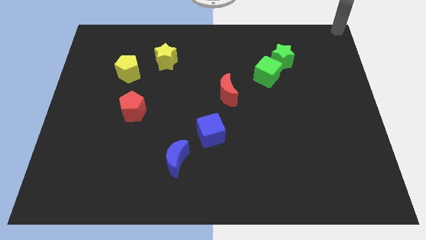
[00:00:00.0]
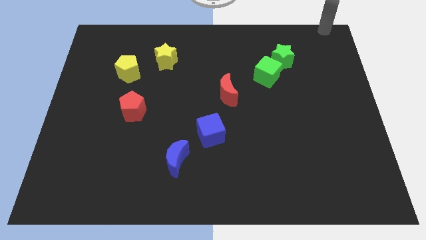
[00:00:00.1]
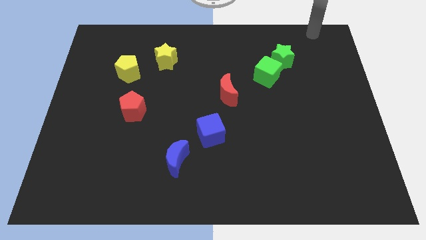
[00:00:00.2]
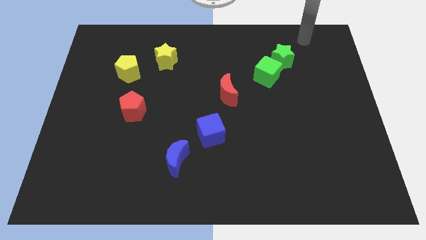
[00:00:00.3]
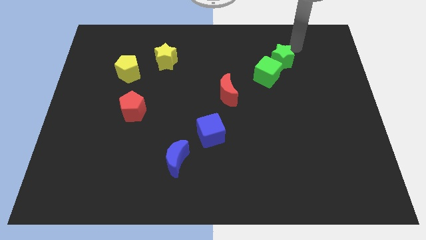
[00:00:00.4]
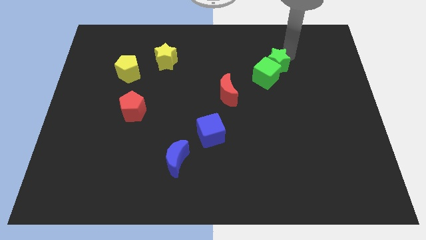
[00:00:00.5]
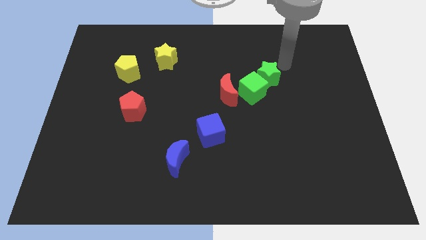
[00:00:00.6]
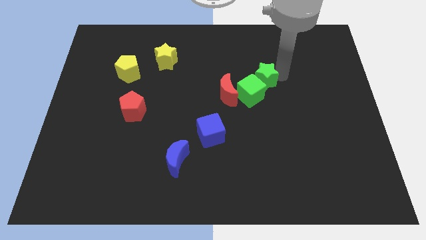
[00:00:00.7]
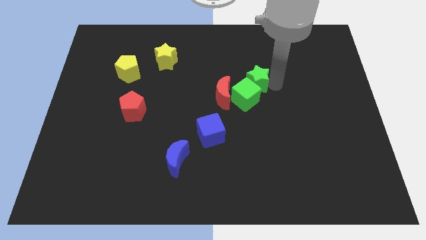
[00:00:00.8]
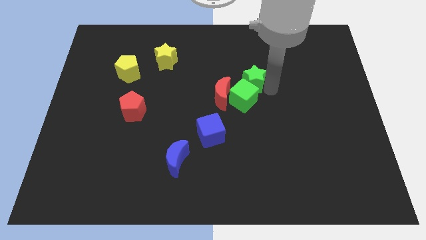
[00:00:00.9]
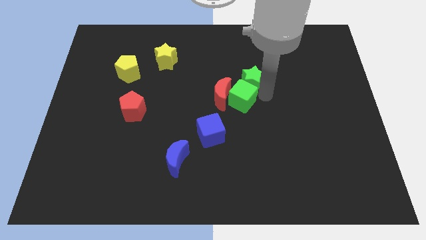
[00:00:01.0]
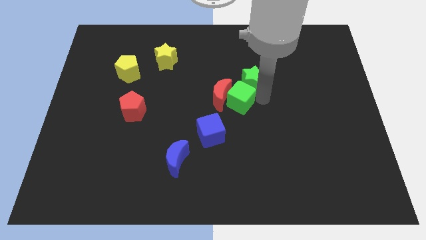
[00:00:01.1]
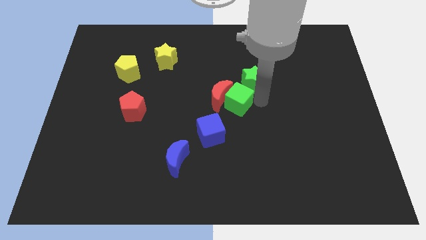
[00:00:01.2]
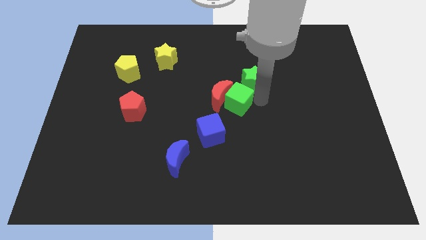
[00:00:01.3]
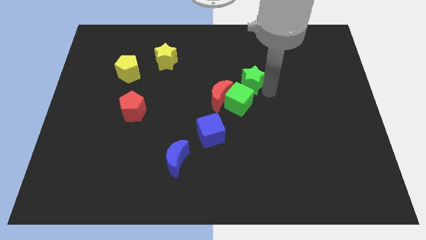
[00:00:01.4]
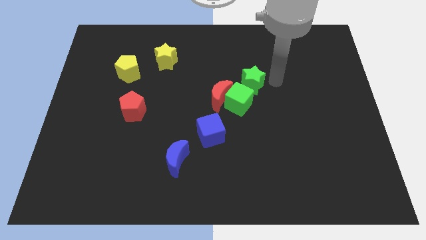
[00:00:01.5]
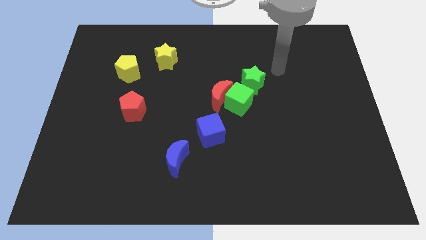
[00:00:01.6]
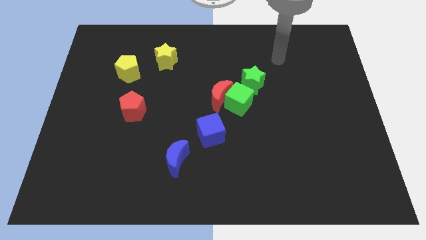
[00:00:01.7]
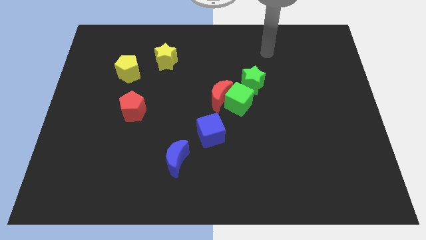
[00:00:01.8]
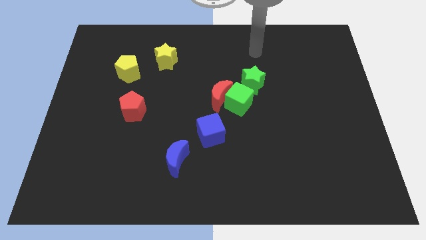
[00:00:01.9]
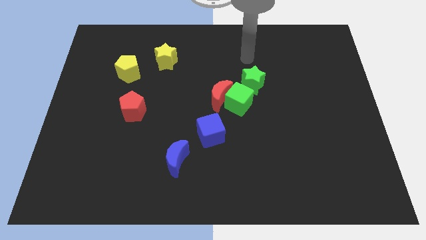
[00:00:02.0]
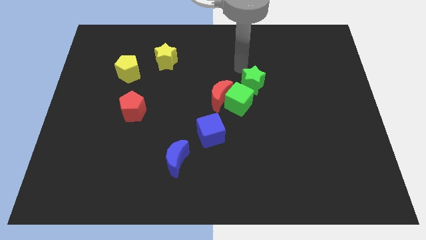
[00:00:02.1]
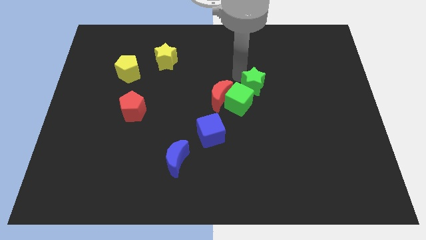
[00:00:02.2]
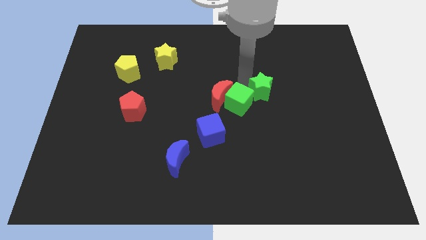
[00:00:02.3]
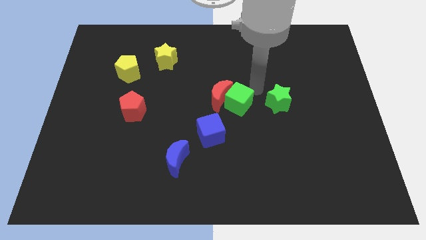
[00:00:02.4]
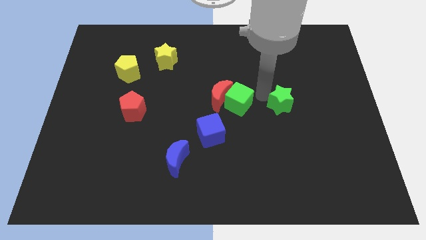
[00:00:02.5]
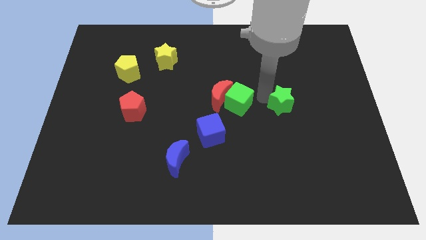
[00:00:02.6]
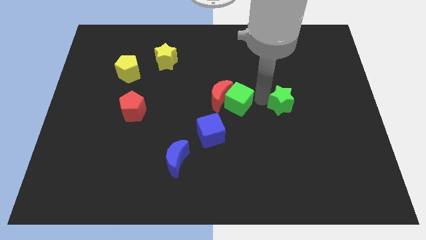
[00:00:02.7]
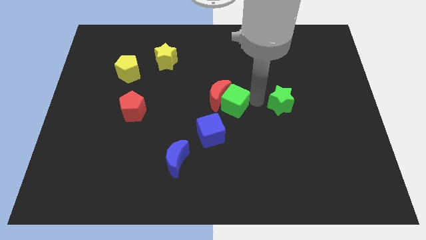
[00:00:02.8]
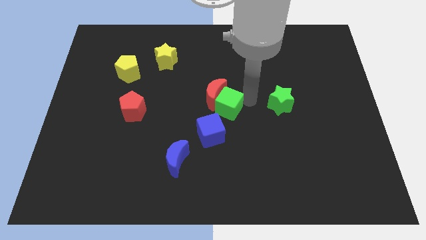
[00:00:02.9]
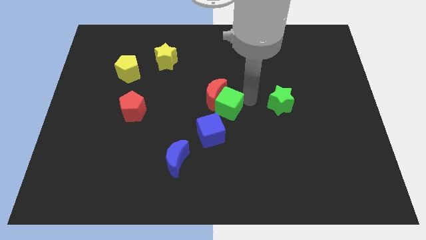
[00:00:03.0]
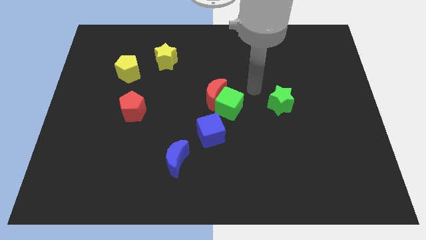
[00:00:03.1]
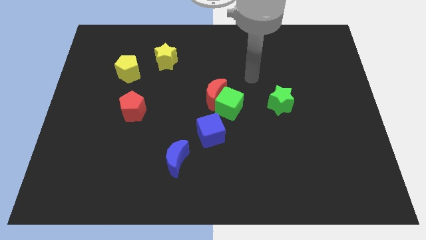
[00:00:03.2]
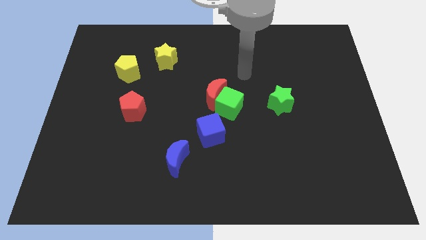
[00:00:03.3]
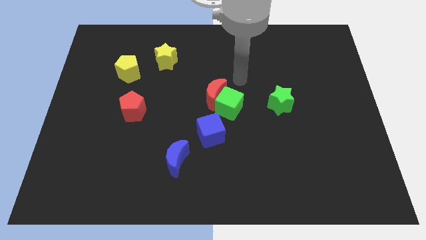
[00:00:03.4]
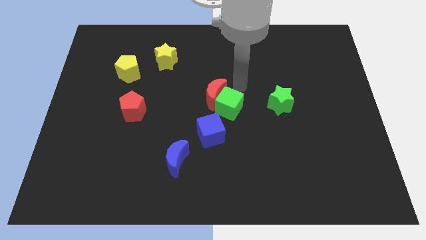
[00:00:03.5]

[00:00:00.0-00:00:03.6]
separate the green blocks

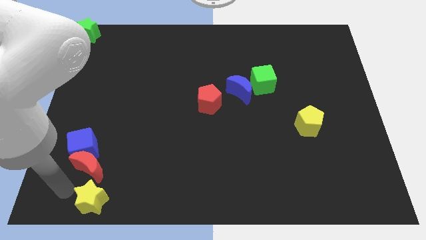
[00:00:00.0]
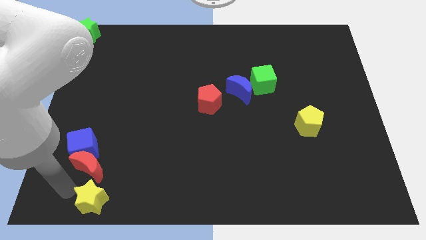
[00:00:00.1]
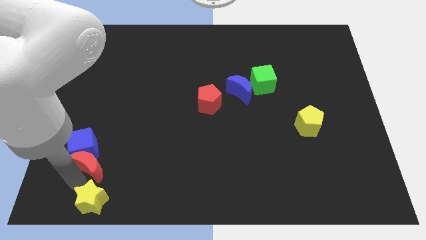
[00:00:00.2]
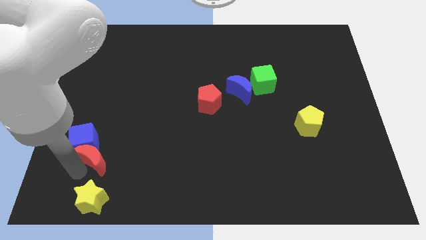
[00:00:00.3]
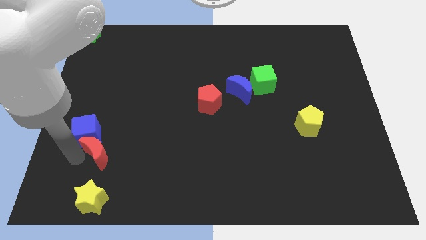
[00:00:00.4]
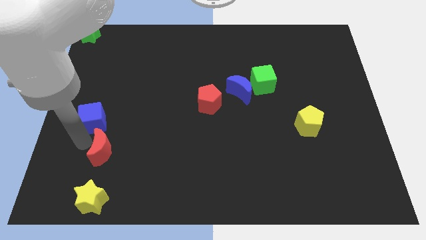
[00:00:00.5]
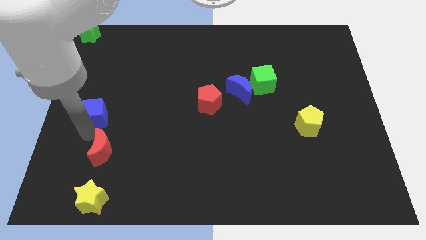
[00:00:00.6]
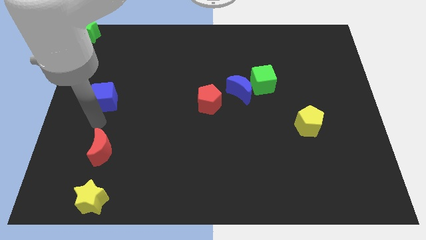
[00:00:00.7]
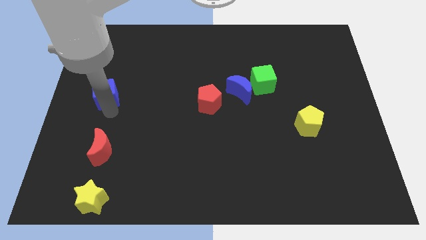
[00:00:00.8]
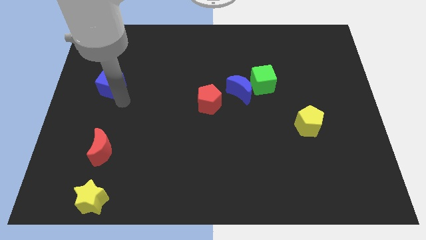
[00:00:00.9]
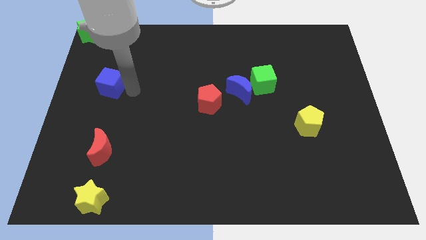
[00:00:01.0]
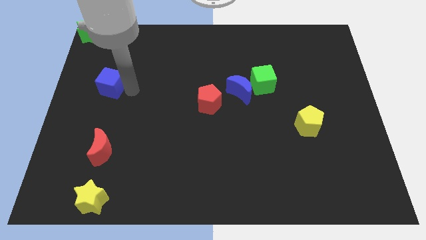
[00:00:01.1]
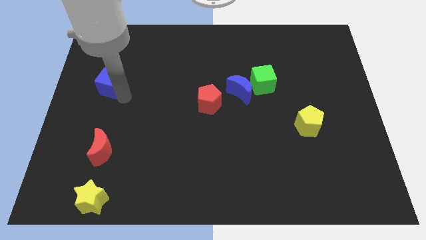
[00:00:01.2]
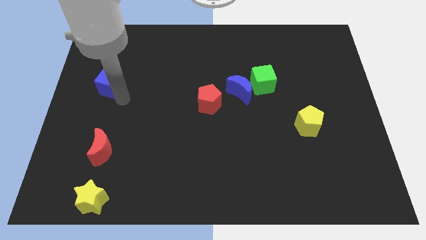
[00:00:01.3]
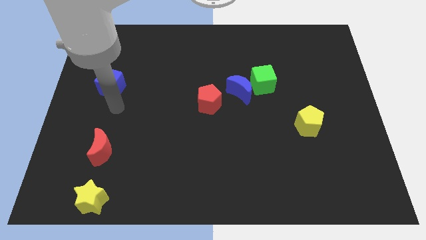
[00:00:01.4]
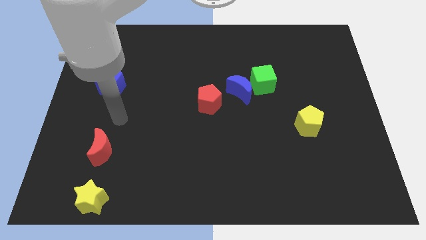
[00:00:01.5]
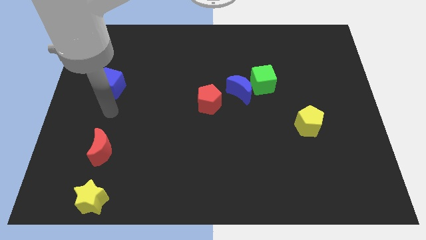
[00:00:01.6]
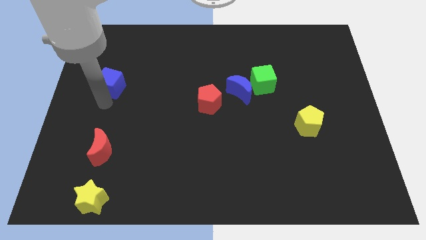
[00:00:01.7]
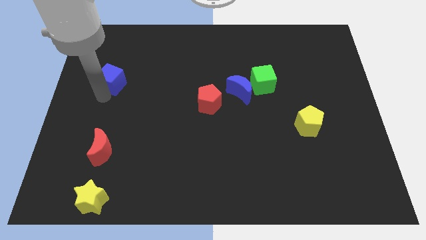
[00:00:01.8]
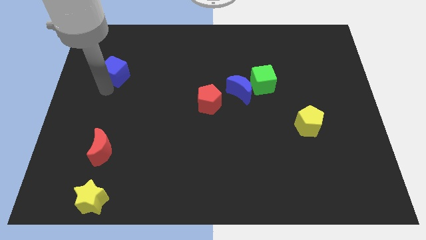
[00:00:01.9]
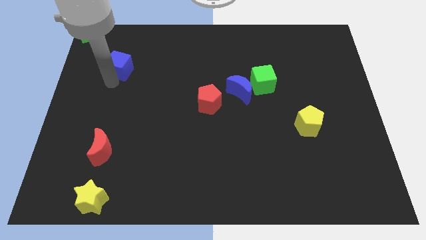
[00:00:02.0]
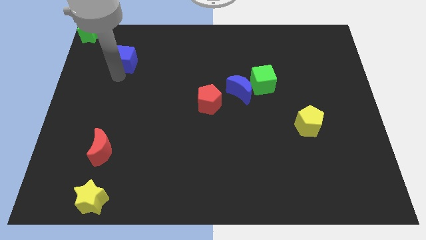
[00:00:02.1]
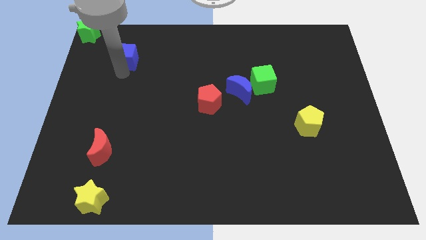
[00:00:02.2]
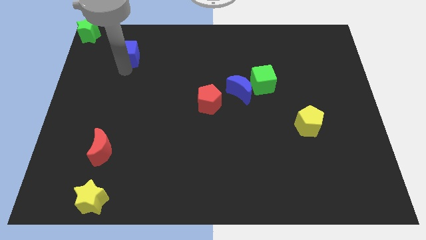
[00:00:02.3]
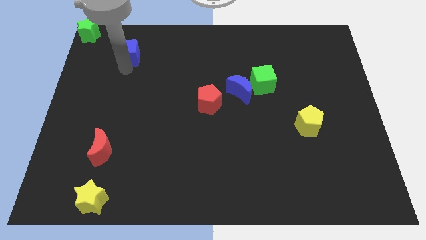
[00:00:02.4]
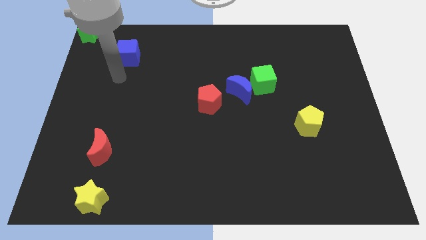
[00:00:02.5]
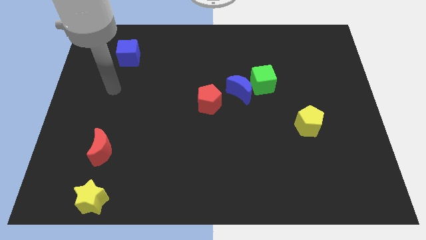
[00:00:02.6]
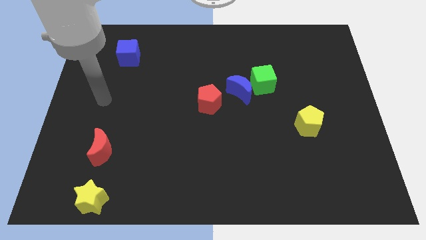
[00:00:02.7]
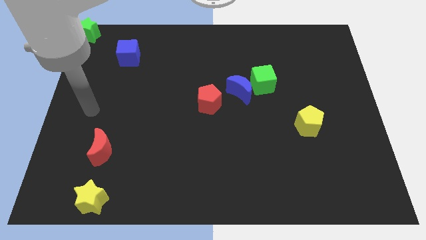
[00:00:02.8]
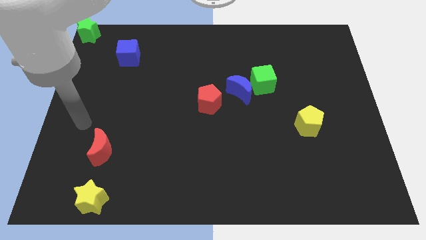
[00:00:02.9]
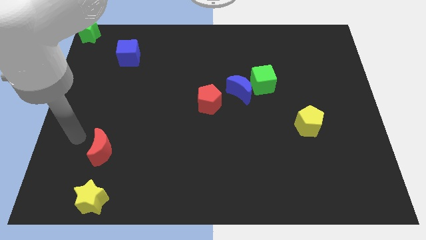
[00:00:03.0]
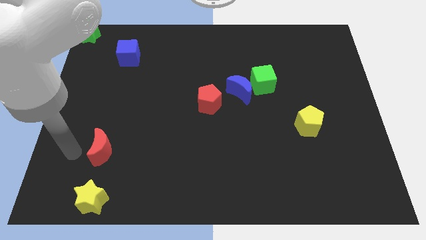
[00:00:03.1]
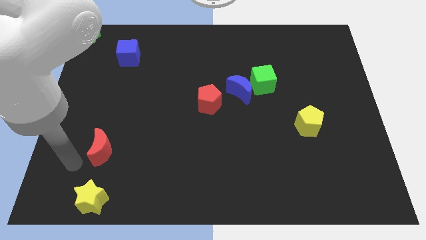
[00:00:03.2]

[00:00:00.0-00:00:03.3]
separate the blue cube from the red moon

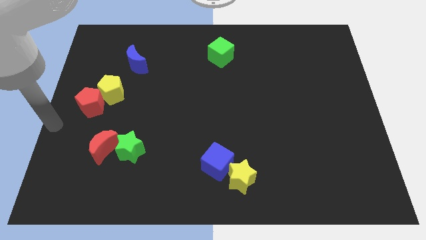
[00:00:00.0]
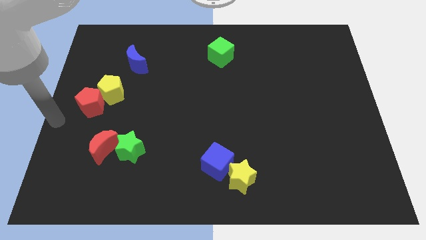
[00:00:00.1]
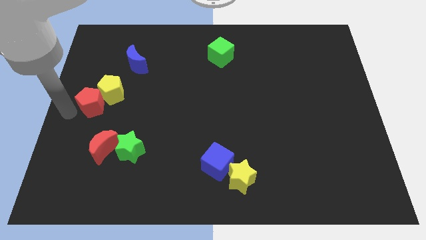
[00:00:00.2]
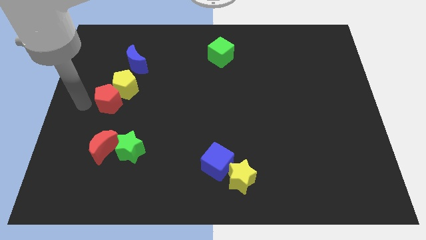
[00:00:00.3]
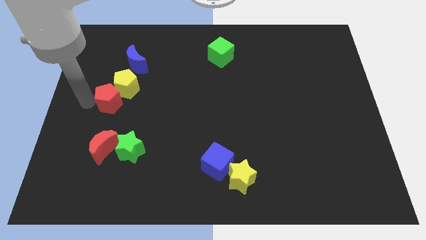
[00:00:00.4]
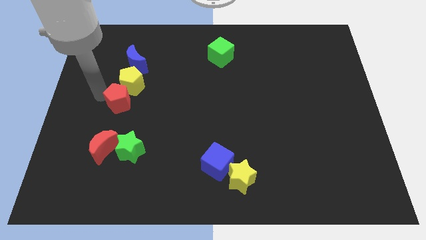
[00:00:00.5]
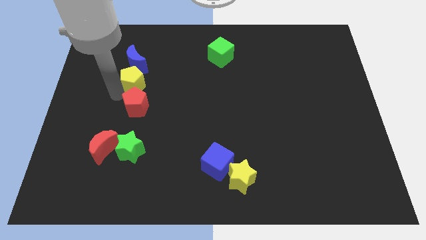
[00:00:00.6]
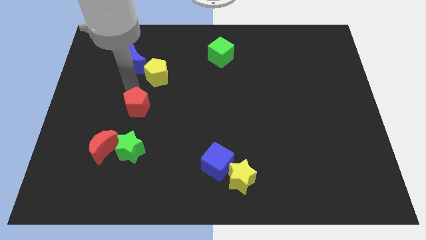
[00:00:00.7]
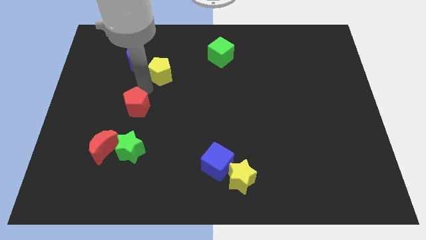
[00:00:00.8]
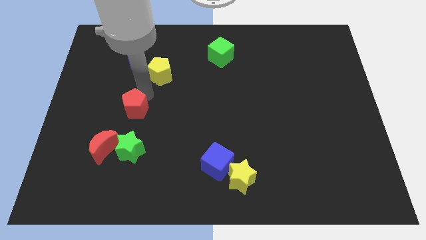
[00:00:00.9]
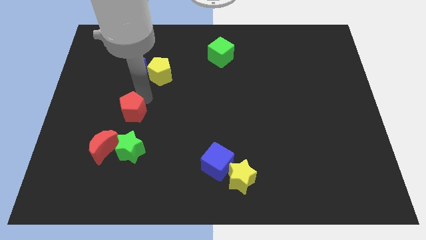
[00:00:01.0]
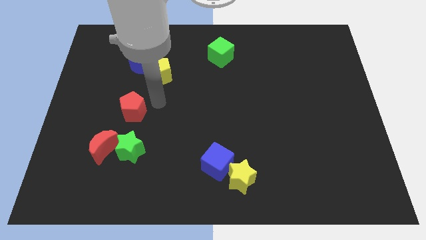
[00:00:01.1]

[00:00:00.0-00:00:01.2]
point your arm between yellow pentagon and red pentagon

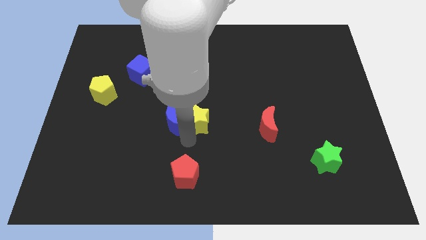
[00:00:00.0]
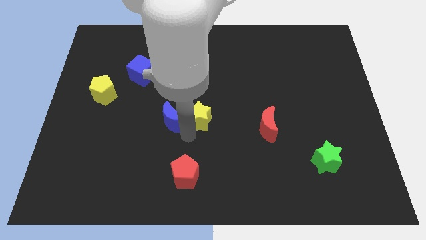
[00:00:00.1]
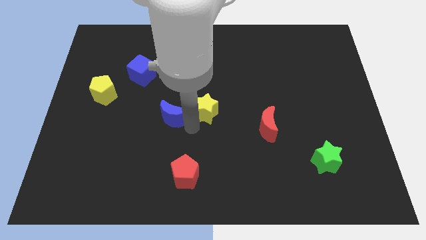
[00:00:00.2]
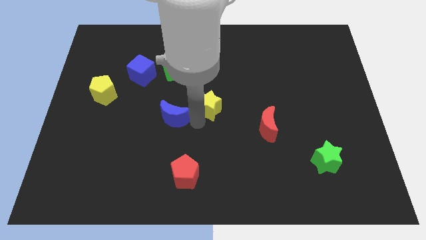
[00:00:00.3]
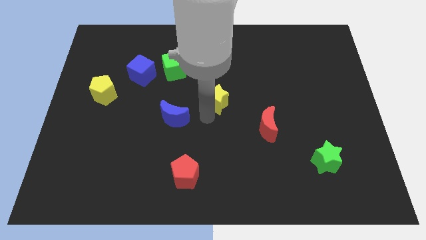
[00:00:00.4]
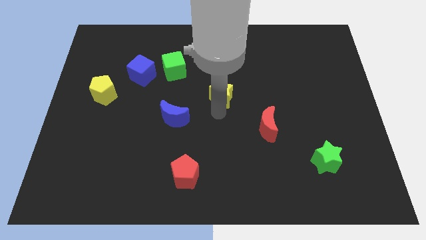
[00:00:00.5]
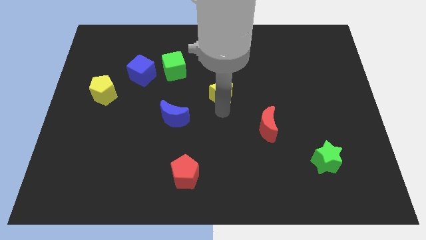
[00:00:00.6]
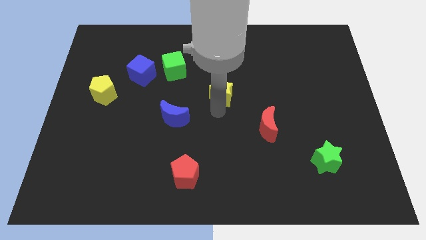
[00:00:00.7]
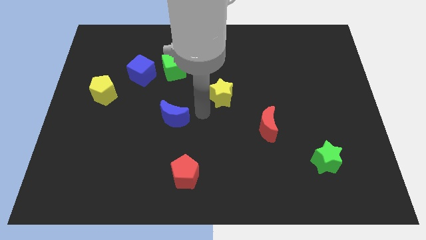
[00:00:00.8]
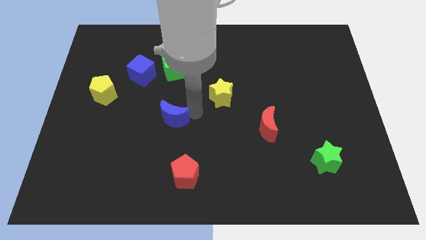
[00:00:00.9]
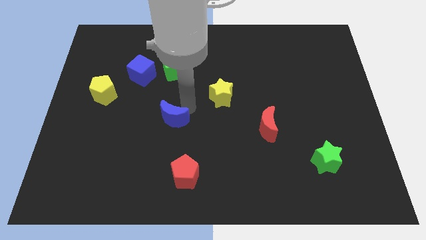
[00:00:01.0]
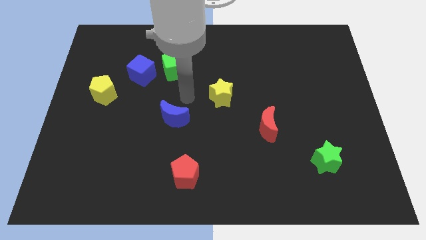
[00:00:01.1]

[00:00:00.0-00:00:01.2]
separate the yellow star from the blue moon
